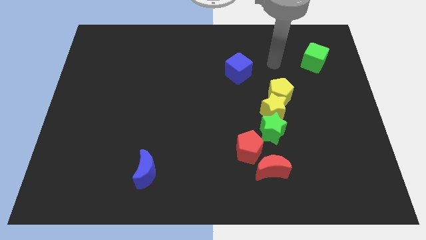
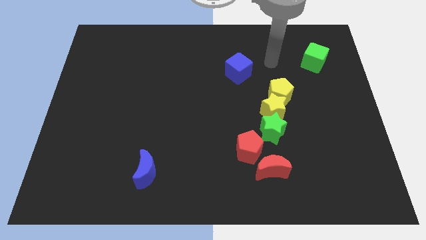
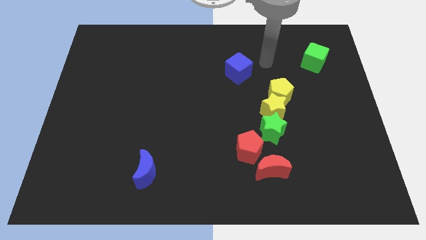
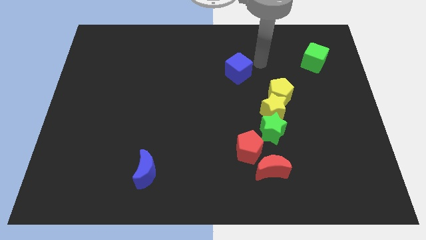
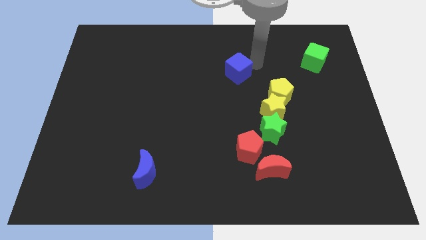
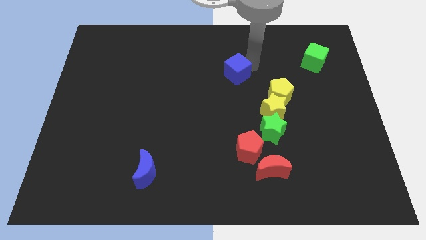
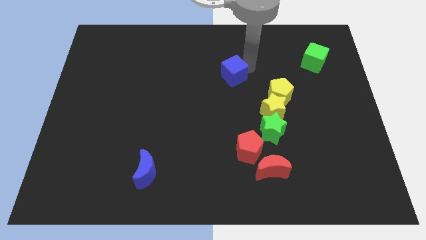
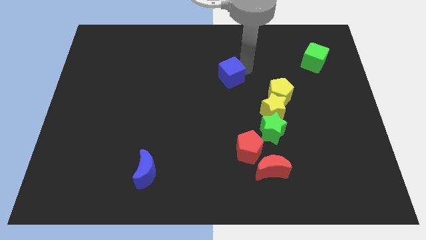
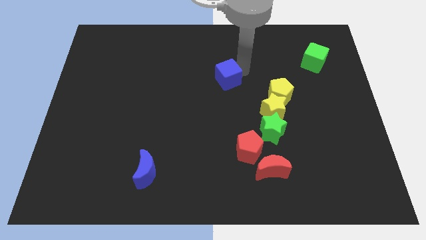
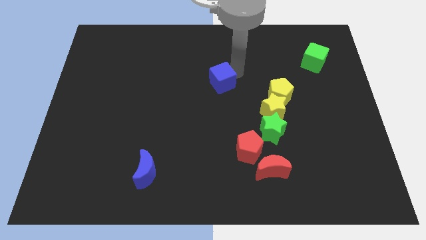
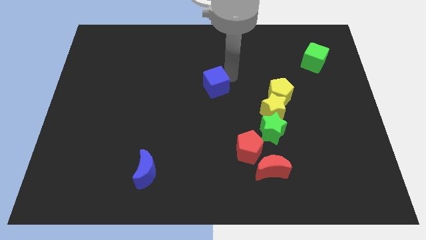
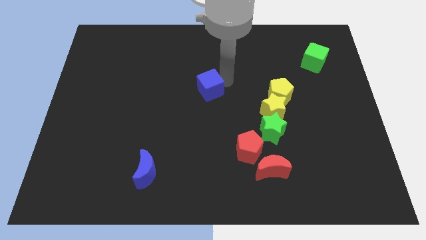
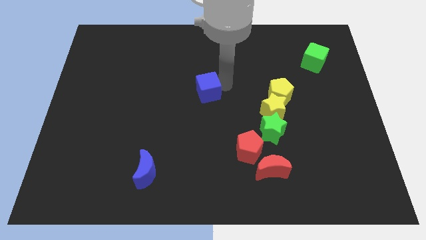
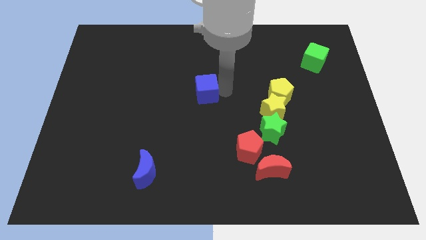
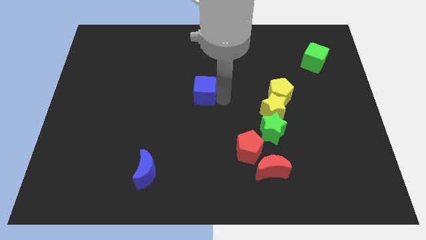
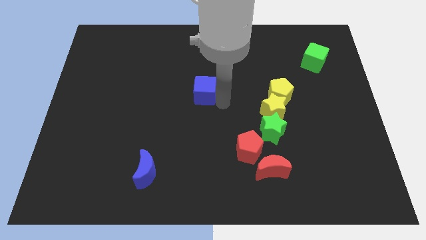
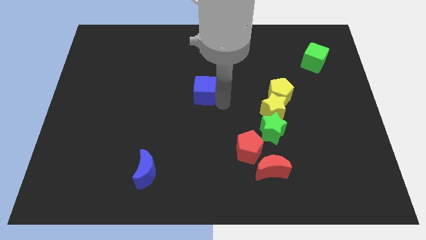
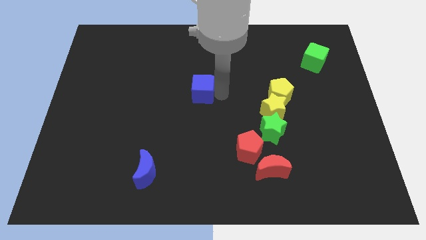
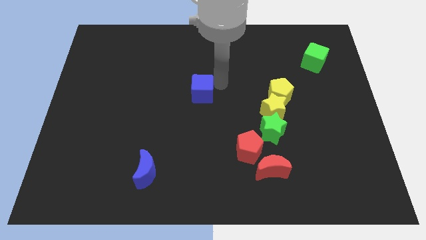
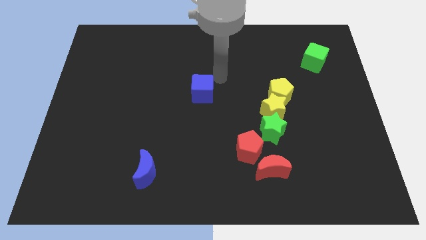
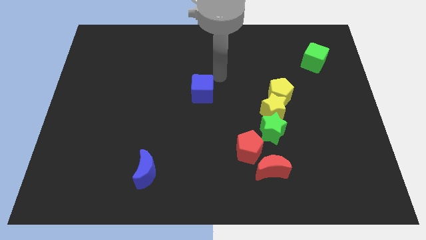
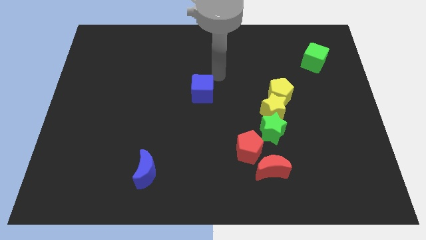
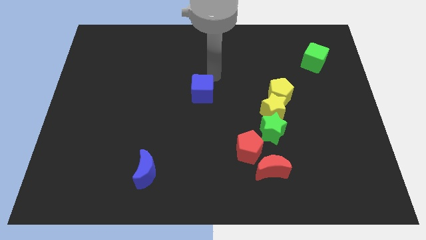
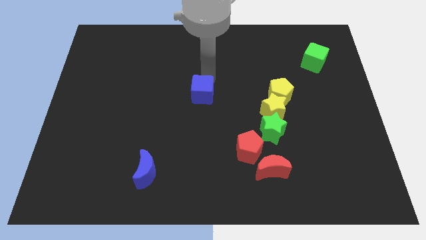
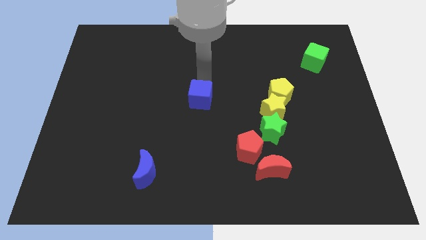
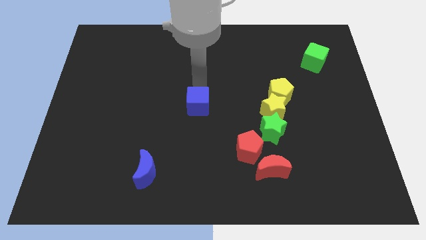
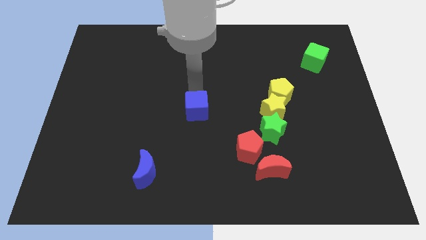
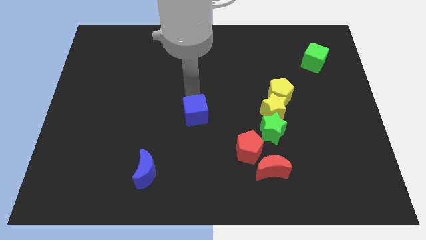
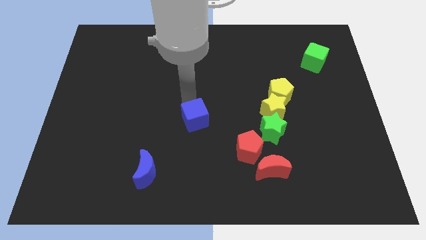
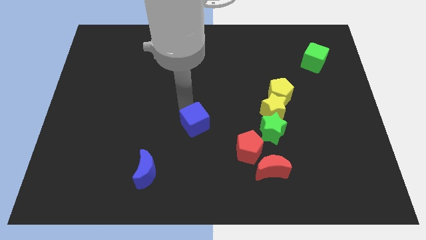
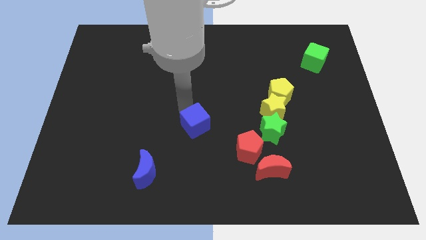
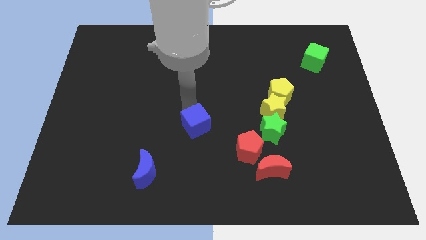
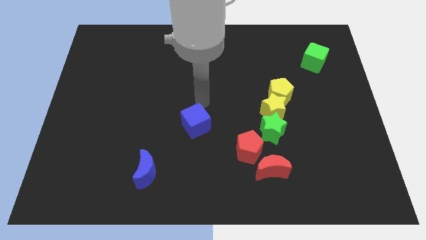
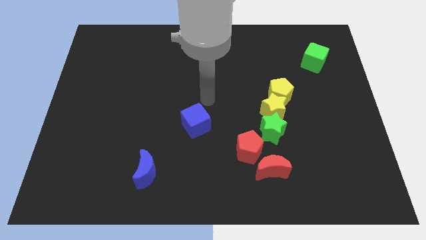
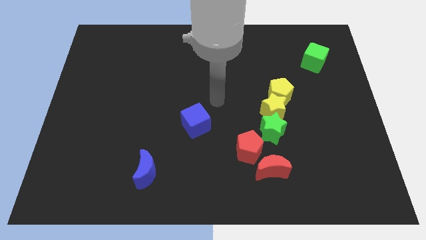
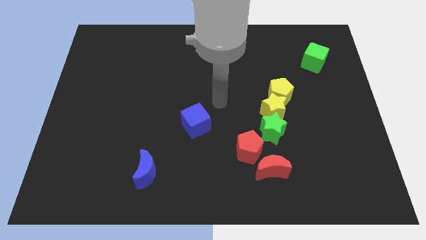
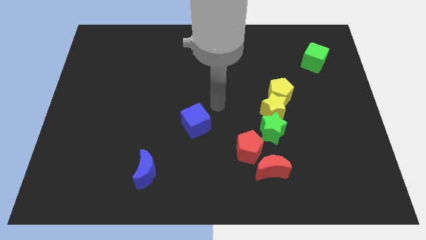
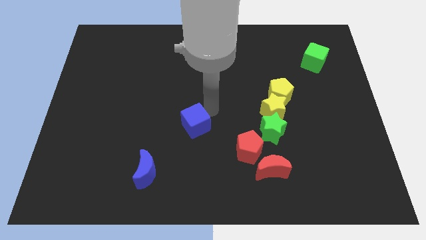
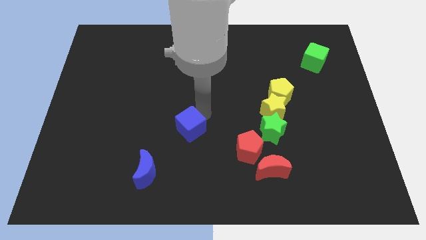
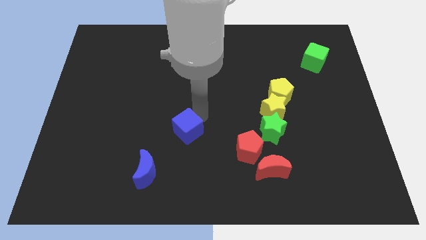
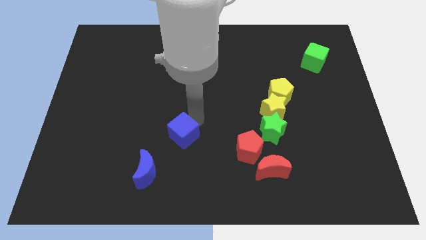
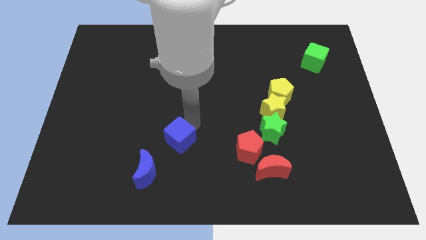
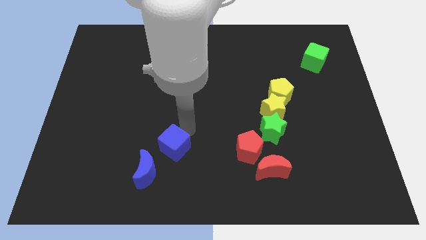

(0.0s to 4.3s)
place the blue cube left to the red pentagon

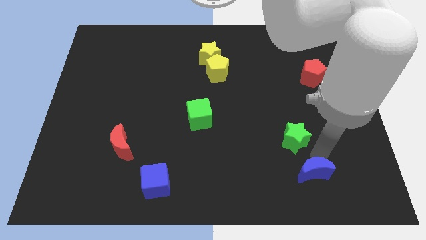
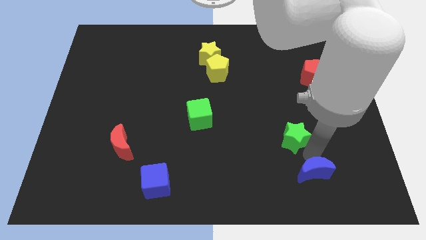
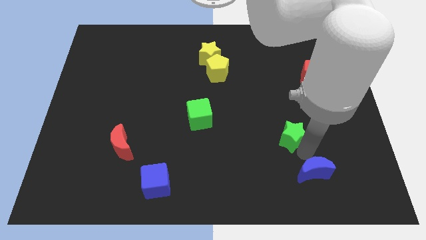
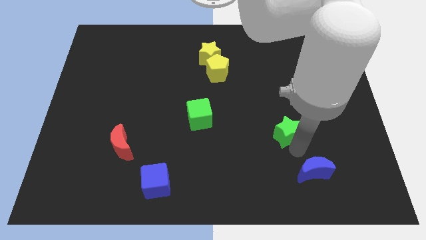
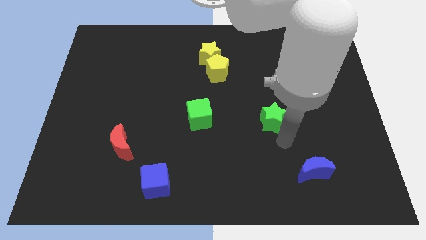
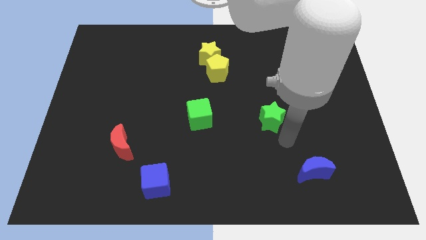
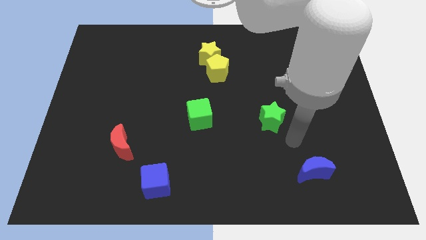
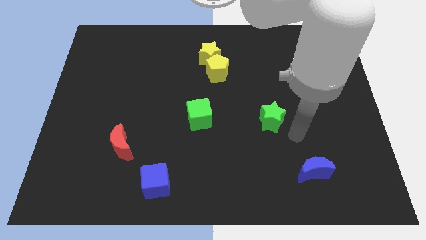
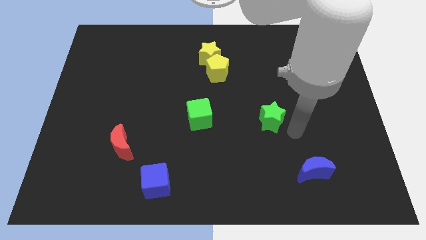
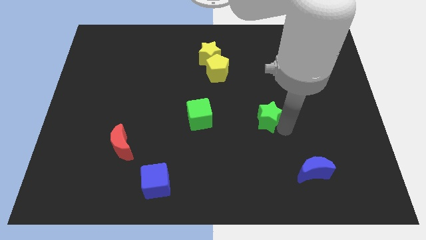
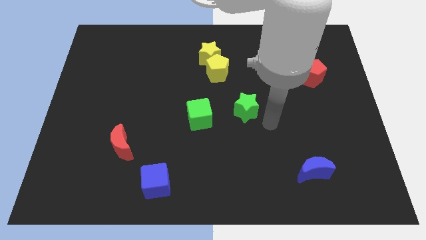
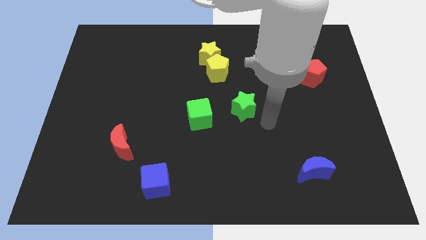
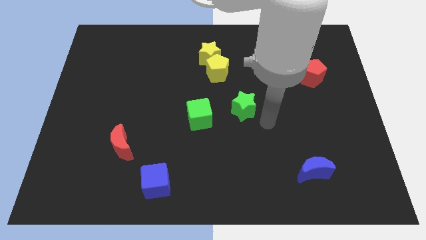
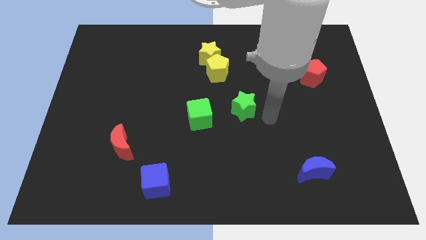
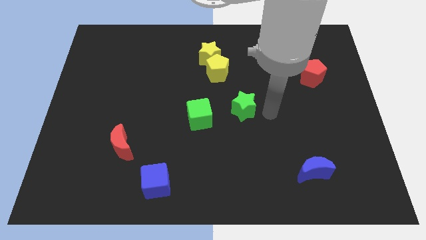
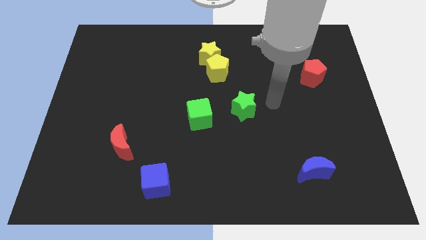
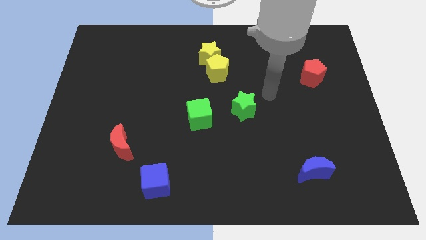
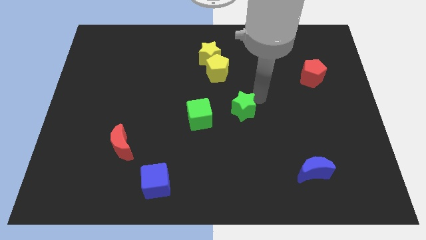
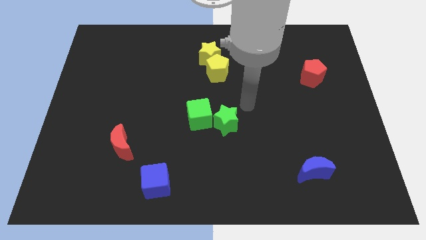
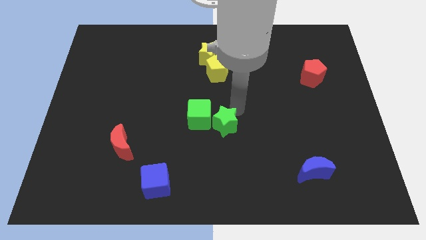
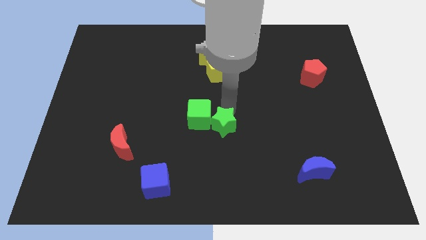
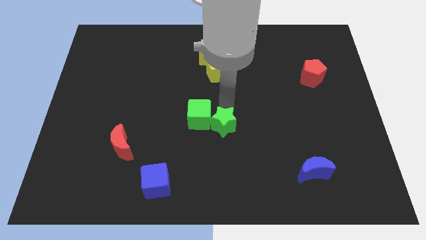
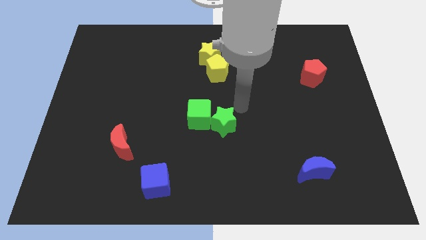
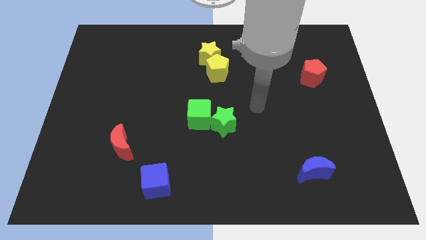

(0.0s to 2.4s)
move the green star into green cube

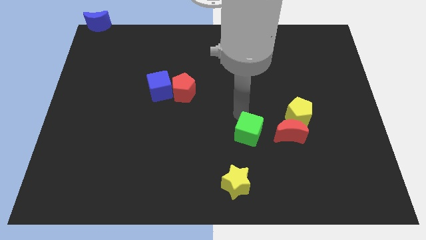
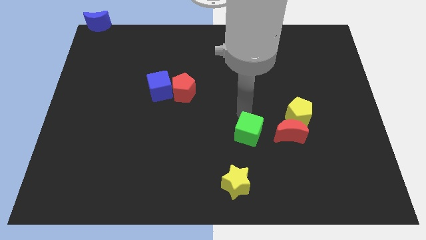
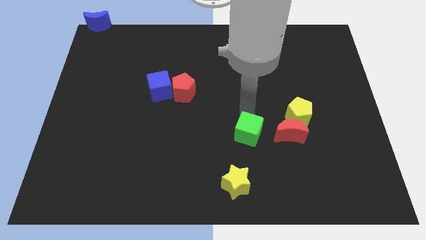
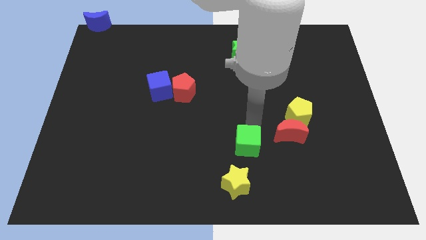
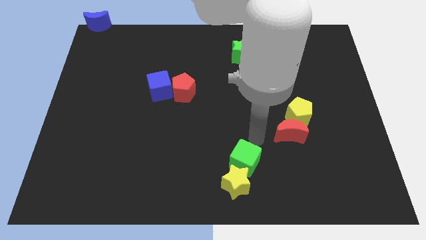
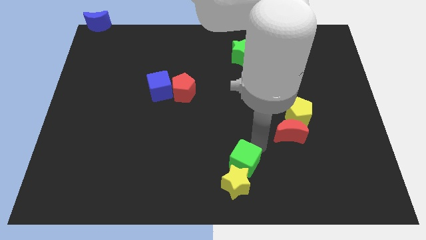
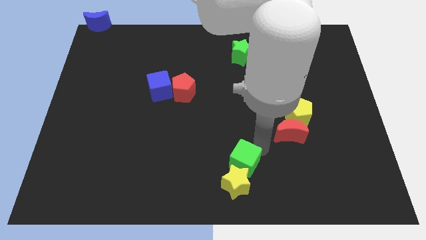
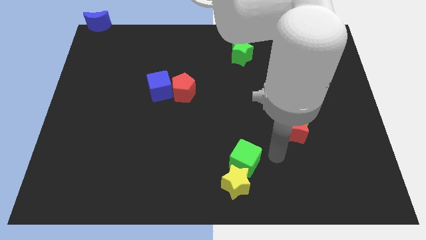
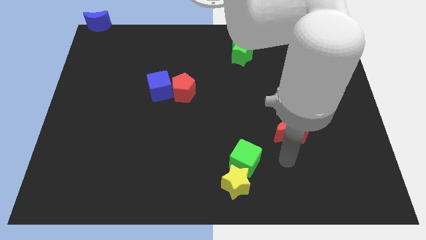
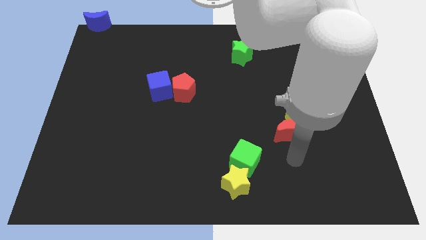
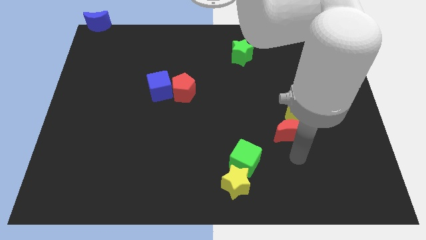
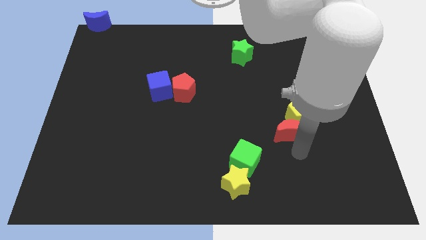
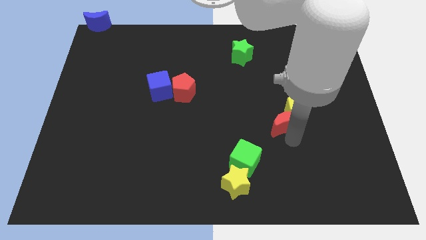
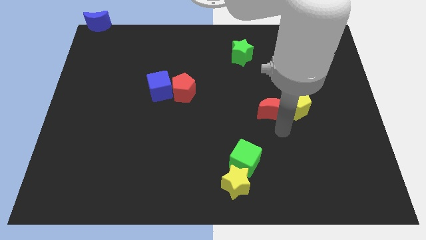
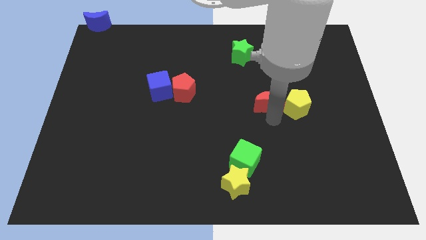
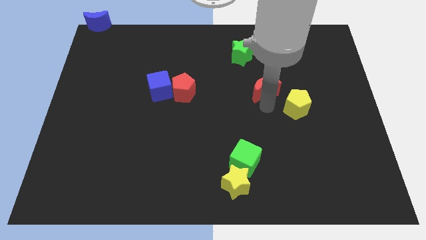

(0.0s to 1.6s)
place red moon to the left of yellow pentagon

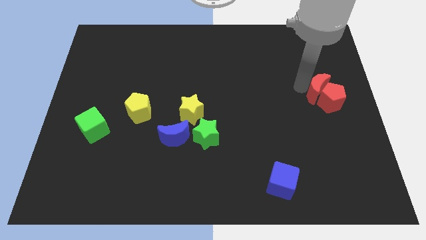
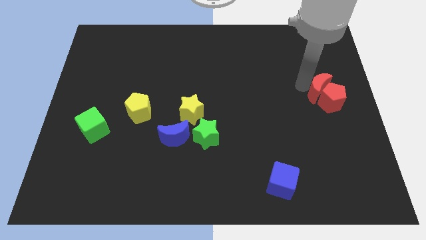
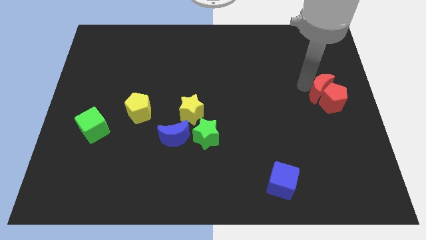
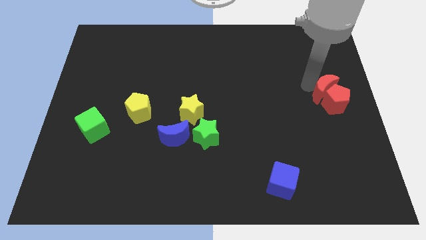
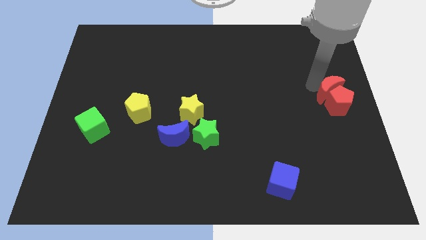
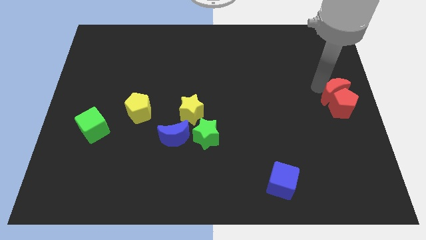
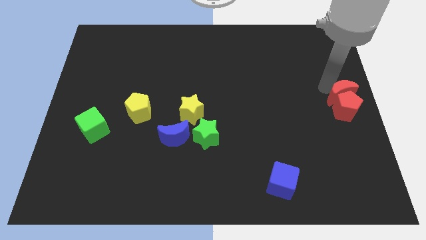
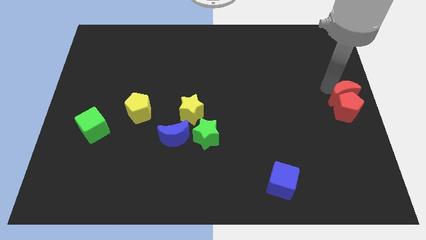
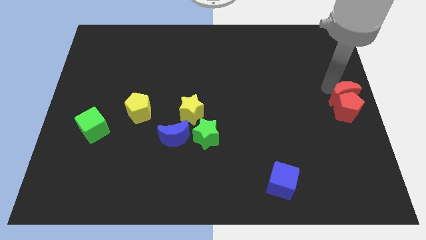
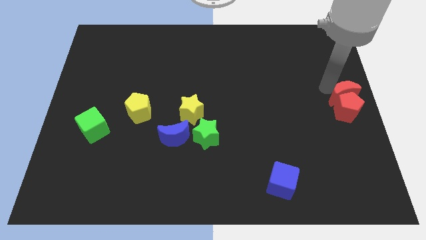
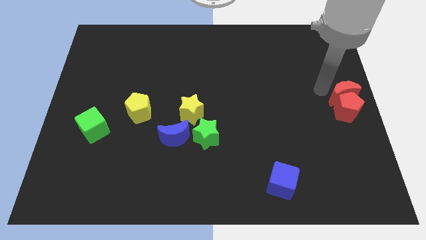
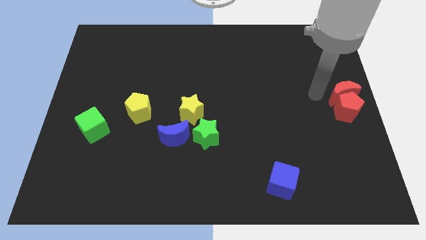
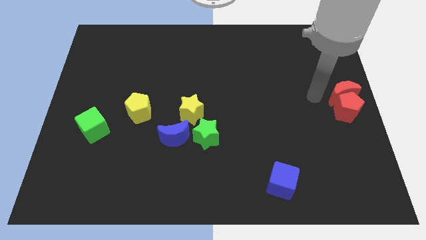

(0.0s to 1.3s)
place red moon to the right center of the board
